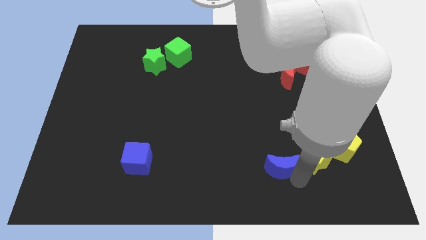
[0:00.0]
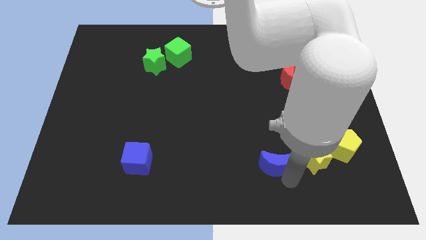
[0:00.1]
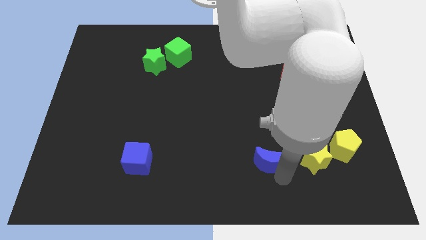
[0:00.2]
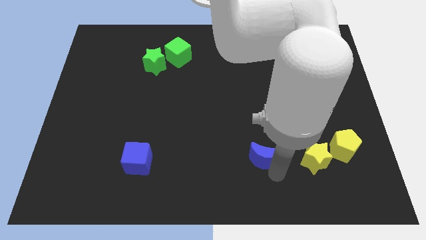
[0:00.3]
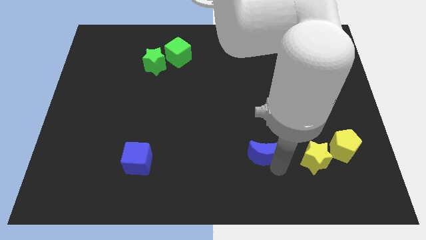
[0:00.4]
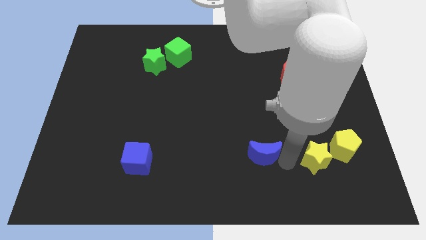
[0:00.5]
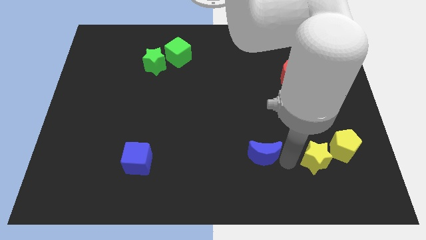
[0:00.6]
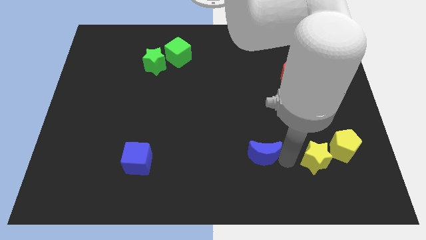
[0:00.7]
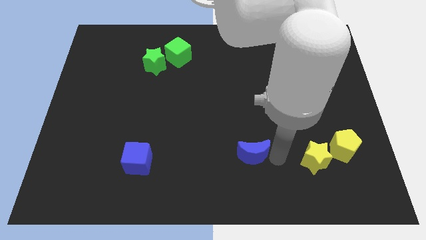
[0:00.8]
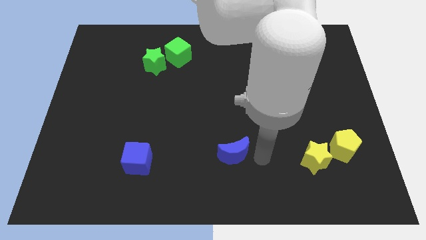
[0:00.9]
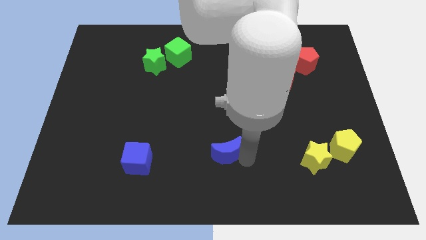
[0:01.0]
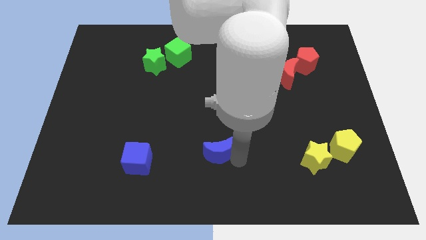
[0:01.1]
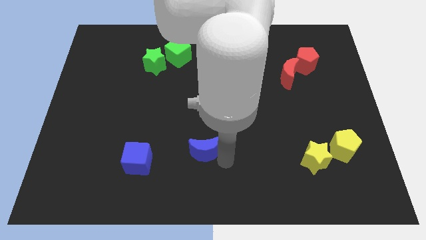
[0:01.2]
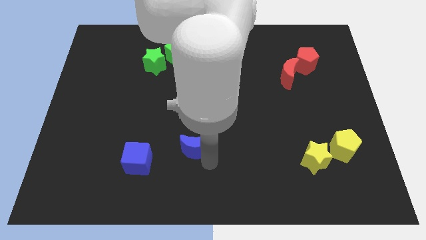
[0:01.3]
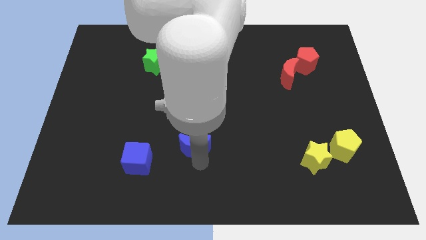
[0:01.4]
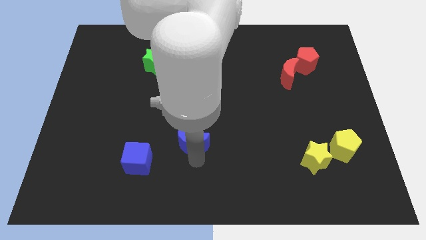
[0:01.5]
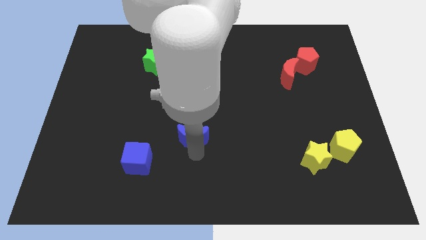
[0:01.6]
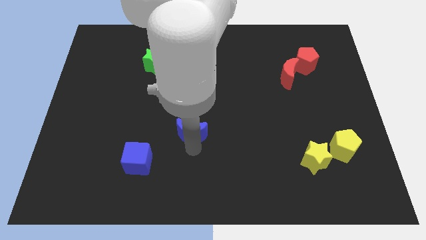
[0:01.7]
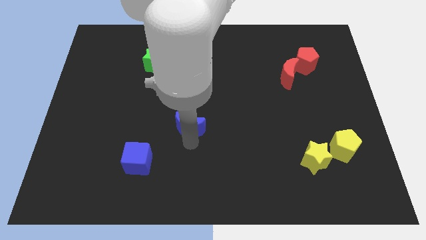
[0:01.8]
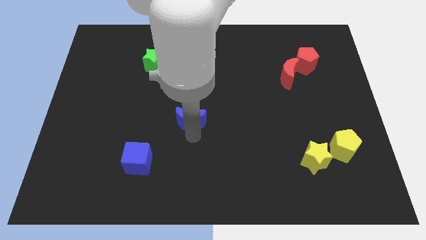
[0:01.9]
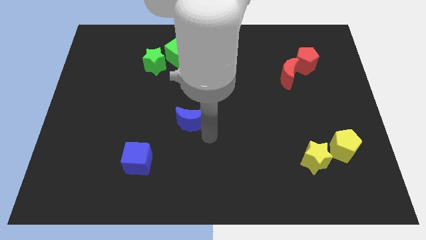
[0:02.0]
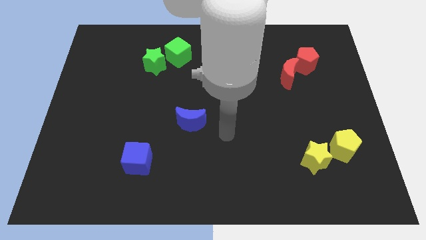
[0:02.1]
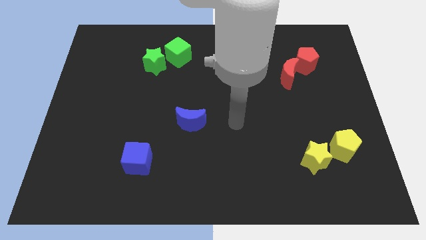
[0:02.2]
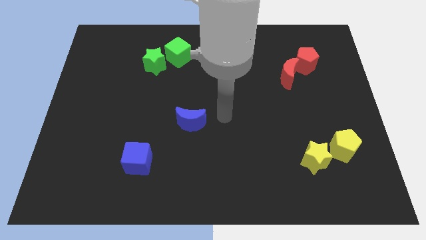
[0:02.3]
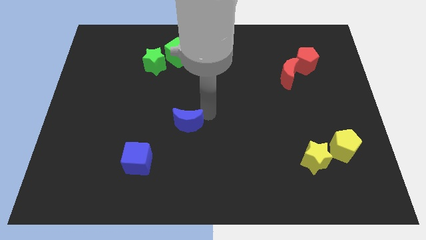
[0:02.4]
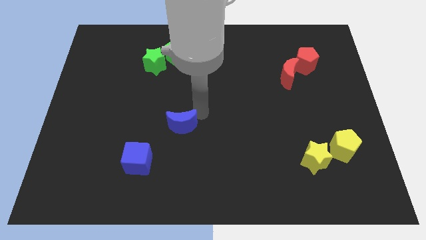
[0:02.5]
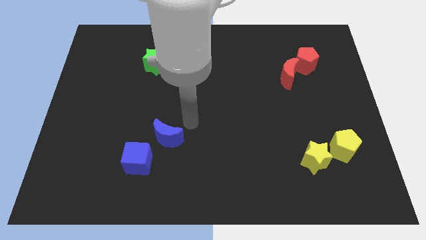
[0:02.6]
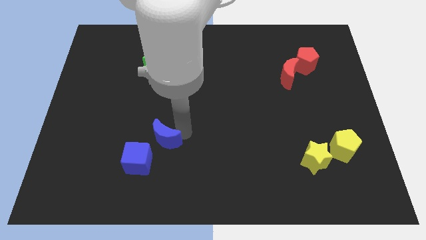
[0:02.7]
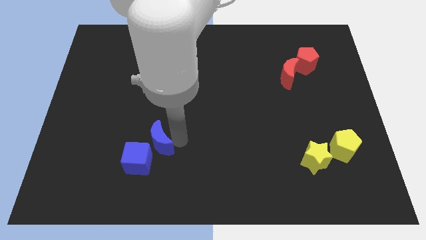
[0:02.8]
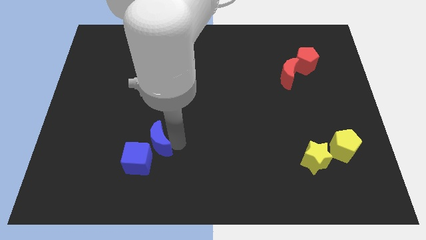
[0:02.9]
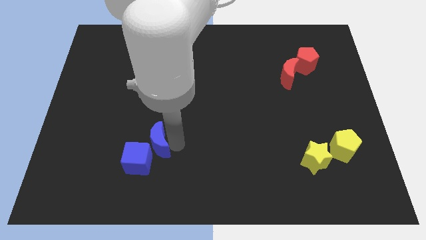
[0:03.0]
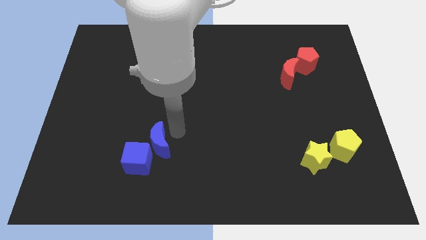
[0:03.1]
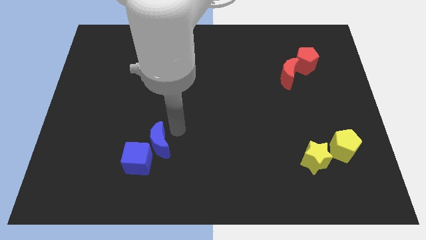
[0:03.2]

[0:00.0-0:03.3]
move the blue crescent on top right of the blue cube

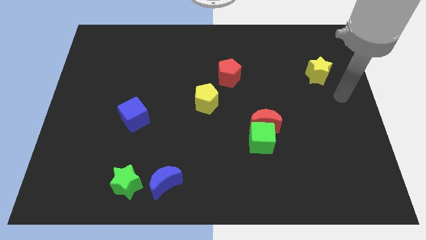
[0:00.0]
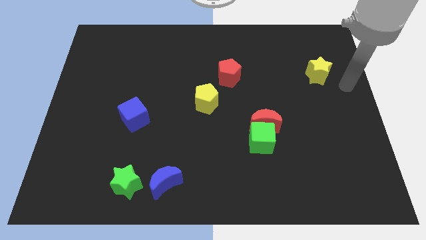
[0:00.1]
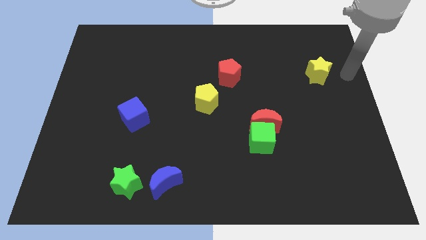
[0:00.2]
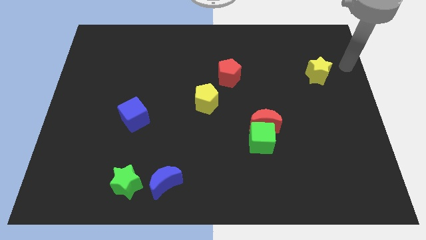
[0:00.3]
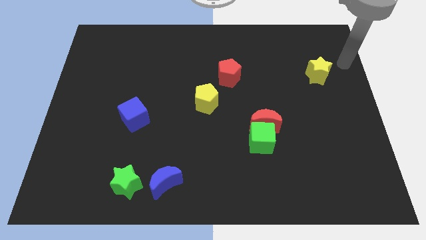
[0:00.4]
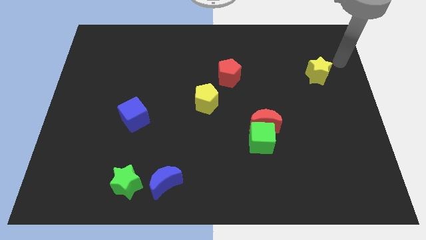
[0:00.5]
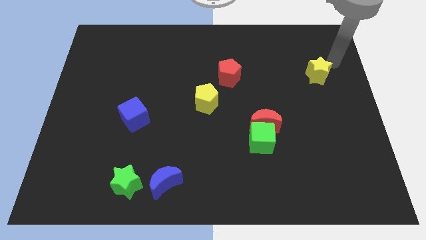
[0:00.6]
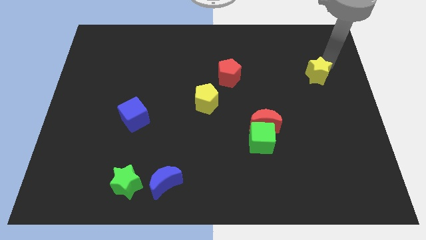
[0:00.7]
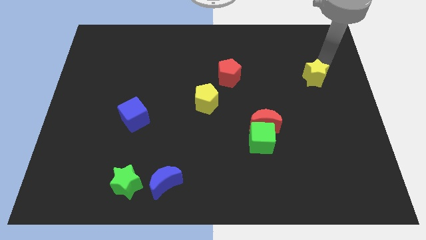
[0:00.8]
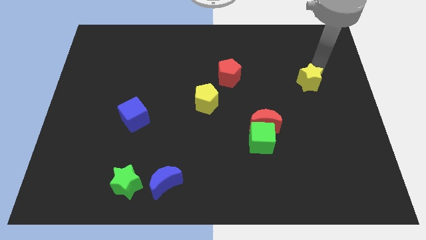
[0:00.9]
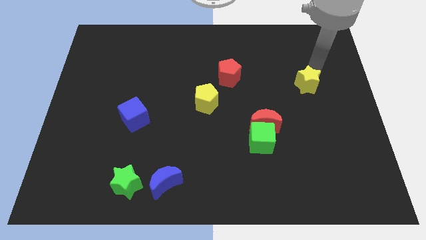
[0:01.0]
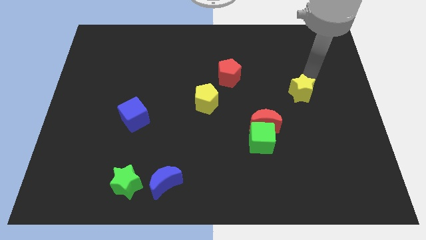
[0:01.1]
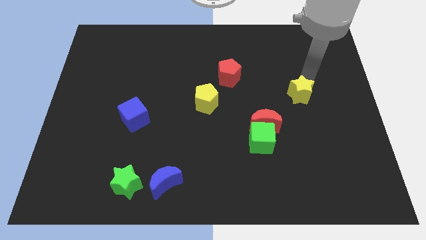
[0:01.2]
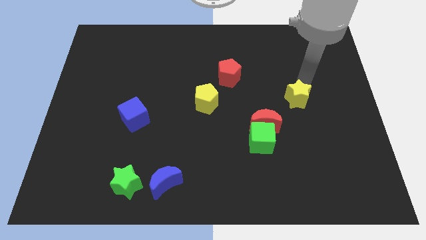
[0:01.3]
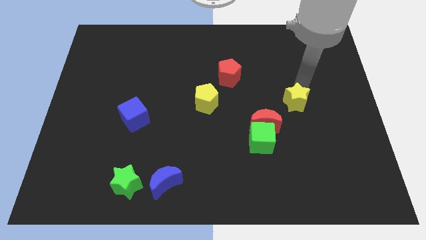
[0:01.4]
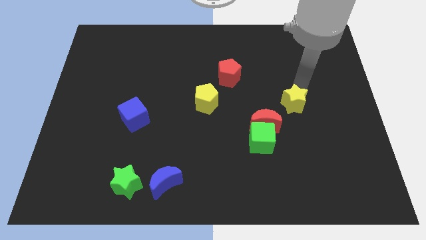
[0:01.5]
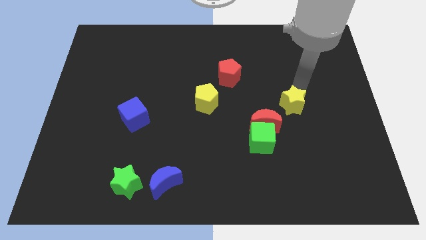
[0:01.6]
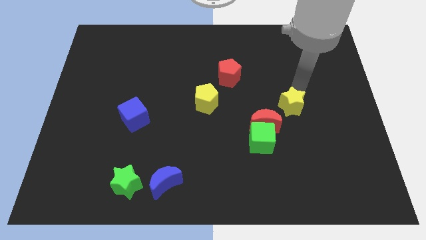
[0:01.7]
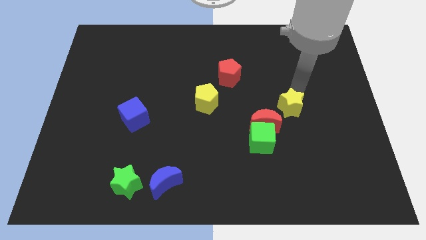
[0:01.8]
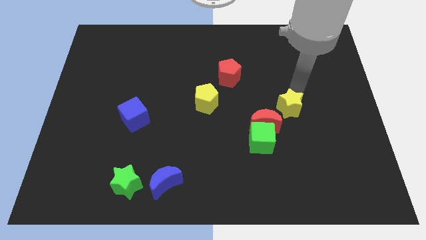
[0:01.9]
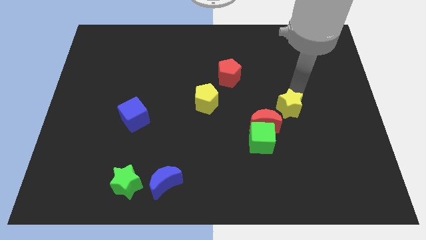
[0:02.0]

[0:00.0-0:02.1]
move the yellow star towards the top right of the red crescent

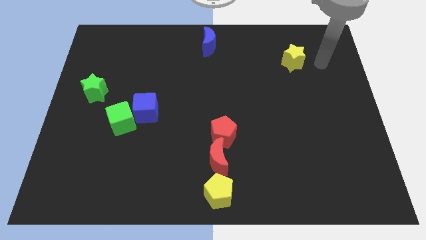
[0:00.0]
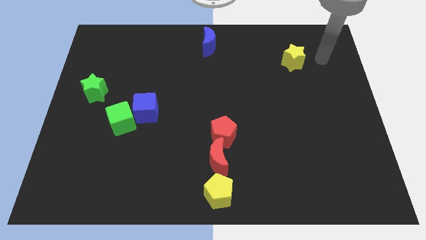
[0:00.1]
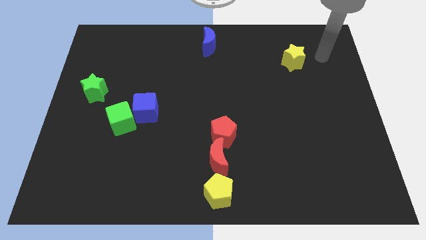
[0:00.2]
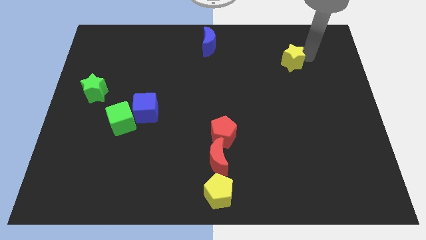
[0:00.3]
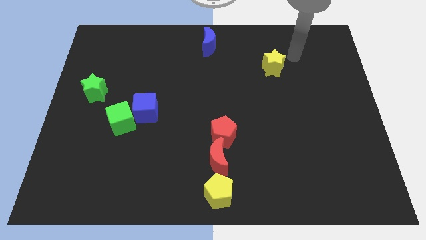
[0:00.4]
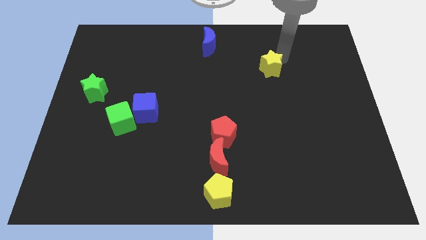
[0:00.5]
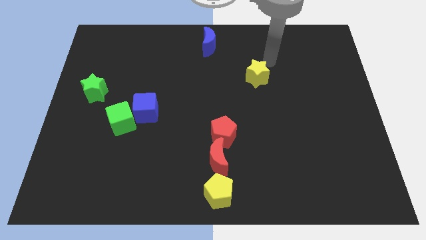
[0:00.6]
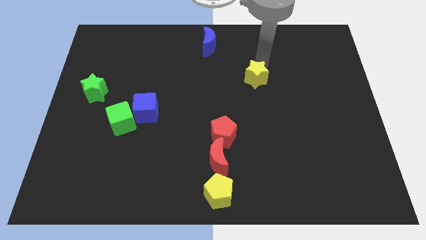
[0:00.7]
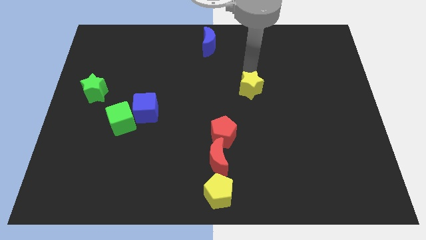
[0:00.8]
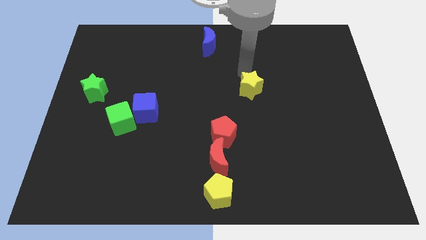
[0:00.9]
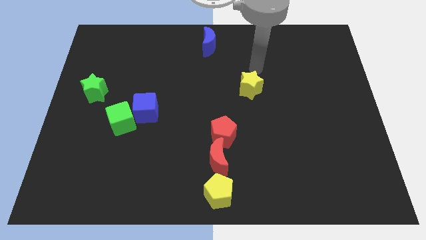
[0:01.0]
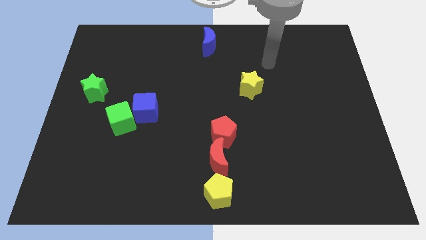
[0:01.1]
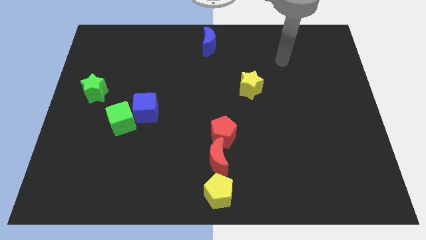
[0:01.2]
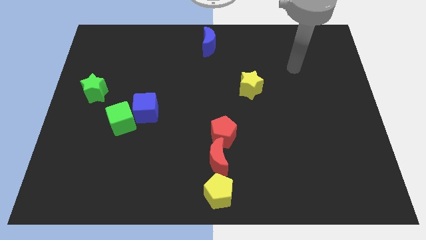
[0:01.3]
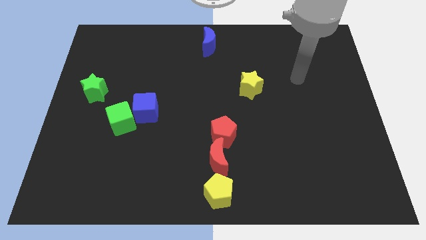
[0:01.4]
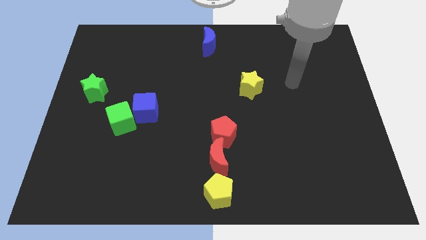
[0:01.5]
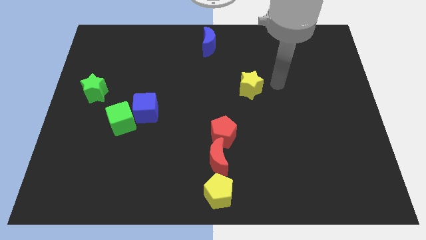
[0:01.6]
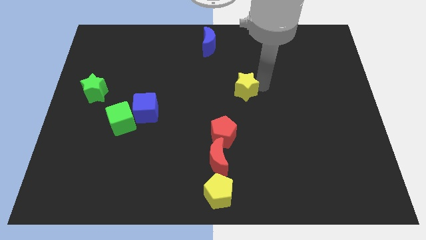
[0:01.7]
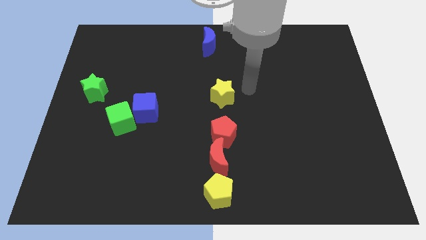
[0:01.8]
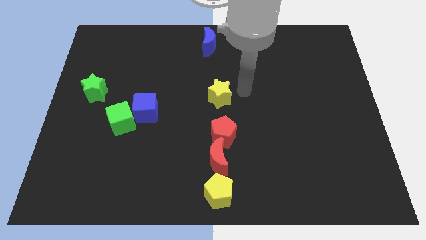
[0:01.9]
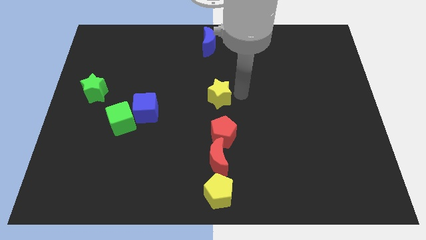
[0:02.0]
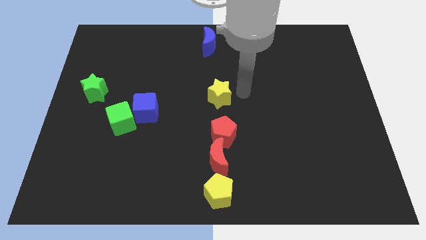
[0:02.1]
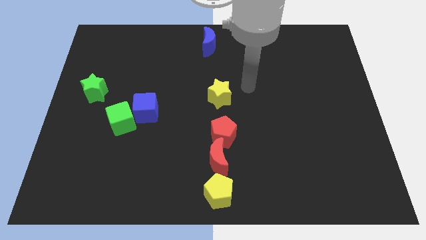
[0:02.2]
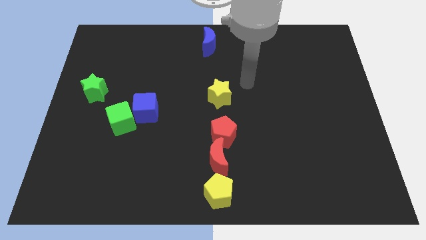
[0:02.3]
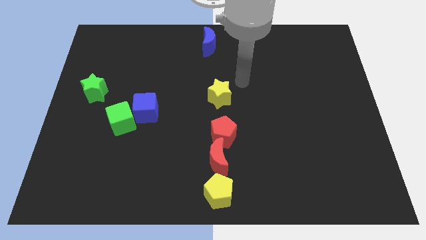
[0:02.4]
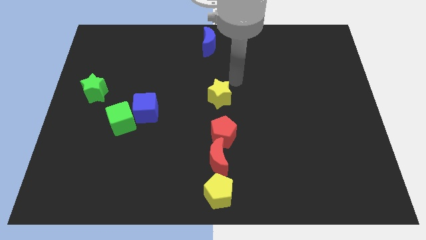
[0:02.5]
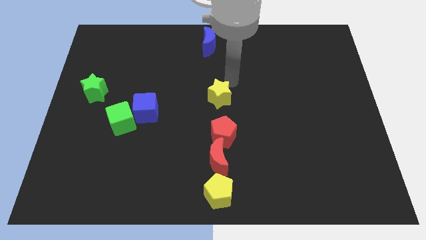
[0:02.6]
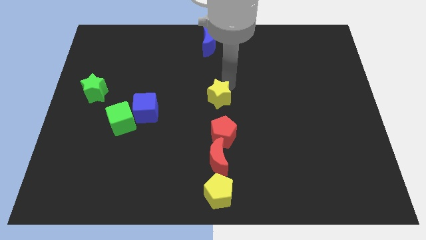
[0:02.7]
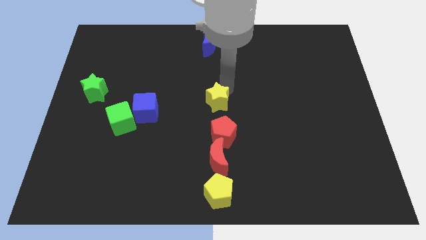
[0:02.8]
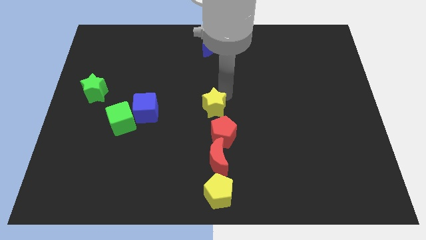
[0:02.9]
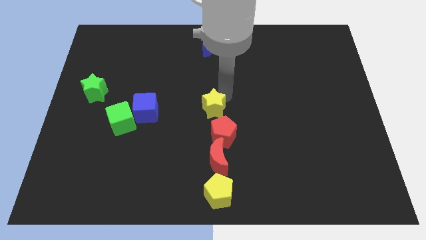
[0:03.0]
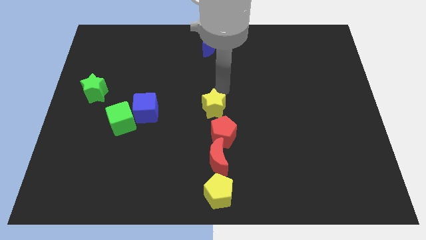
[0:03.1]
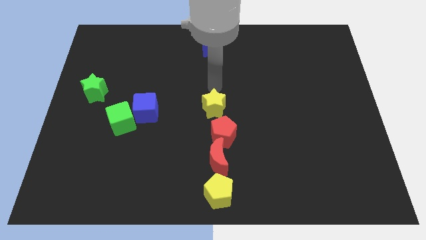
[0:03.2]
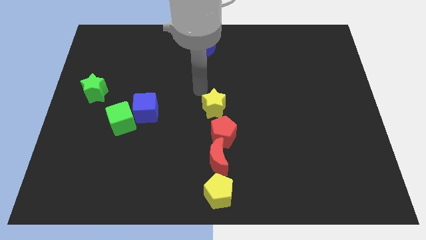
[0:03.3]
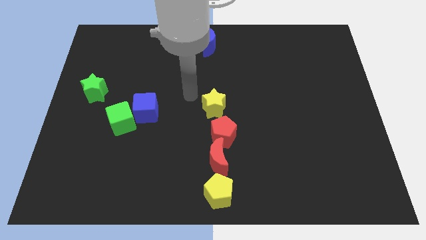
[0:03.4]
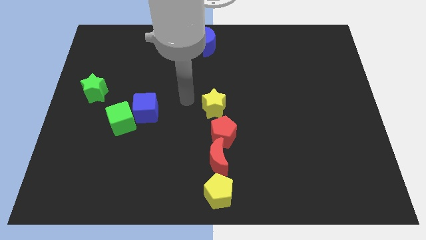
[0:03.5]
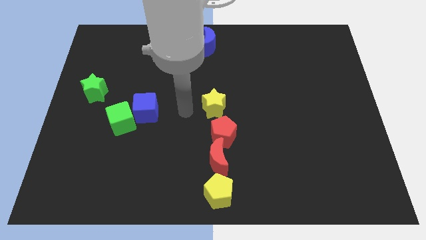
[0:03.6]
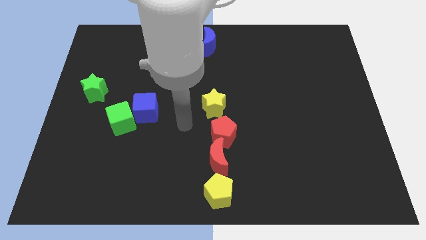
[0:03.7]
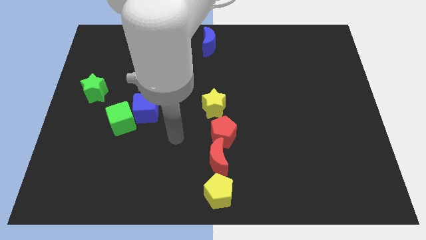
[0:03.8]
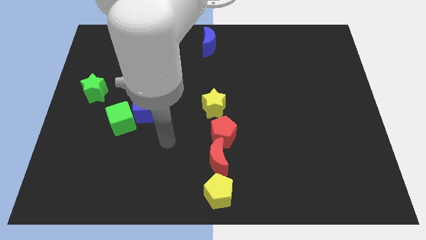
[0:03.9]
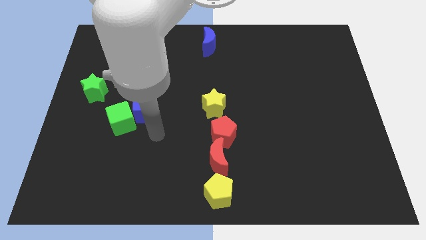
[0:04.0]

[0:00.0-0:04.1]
place yellow star top side the red pentagon
